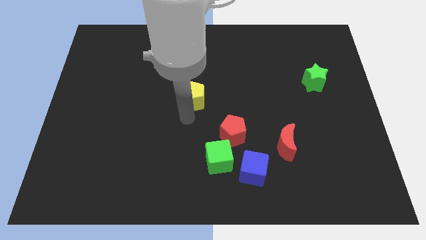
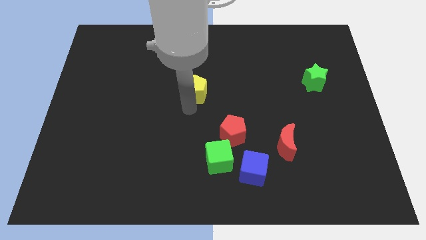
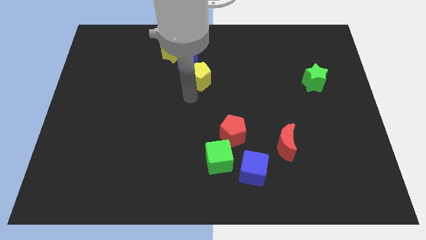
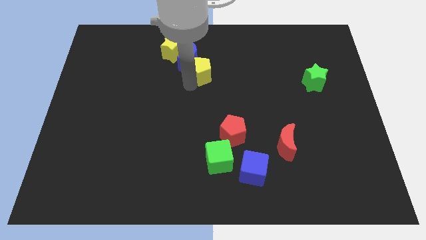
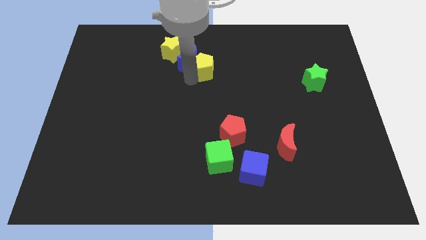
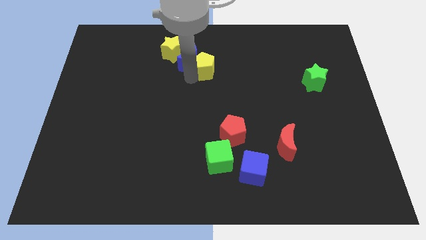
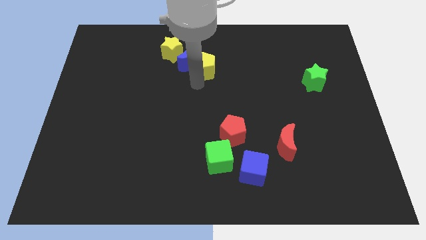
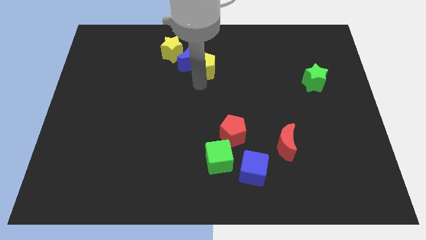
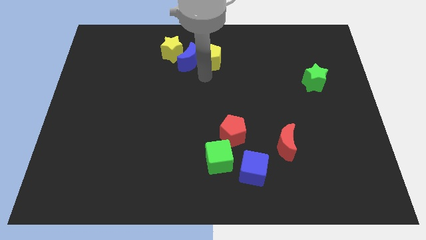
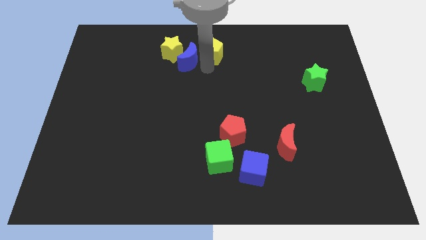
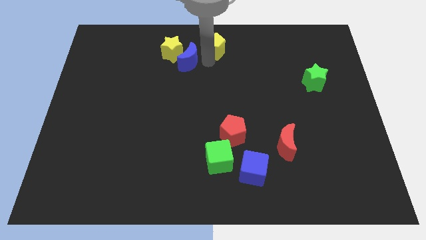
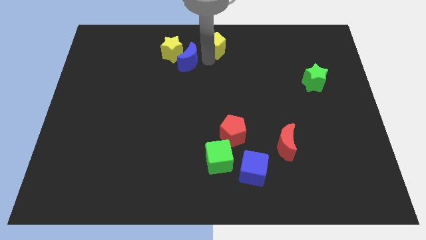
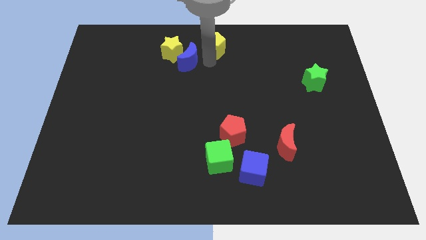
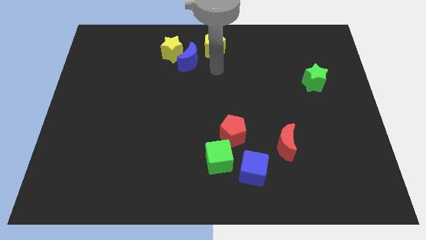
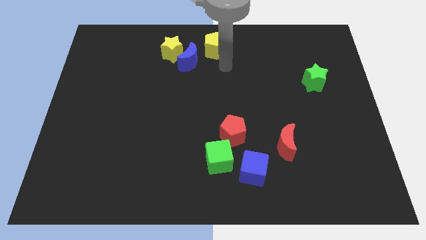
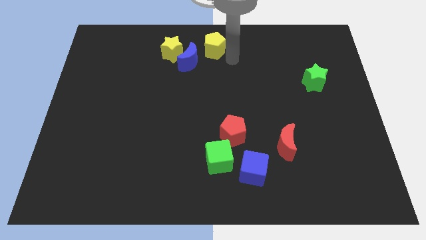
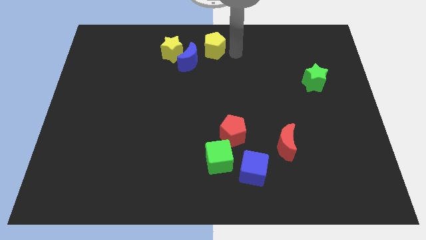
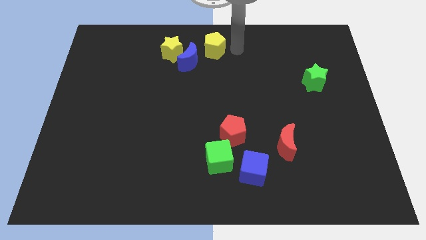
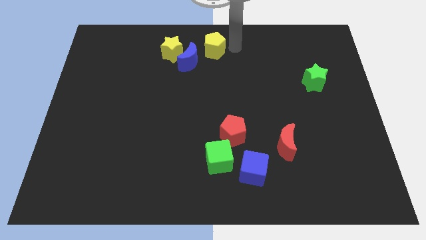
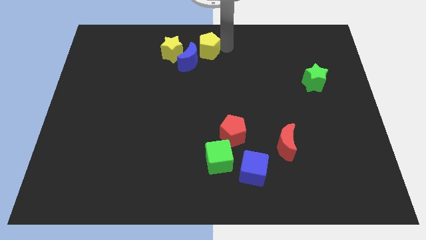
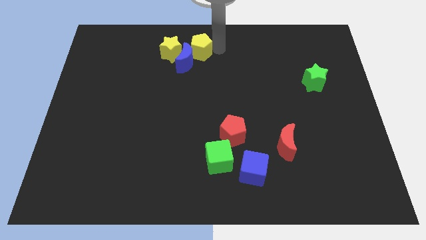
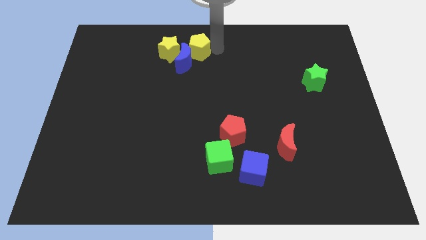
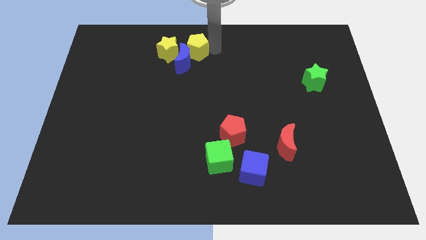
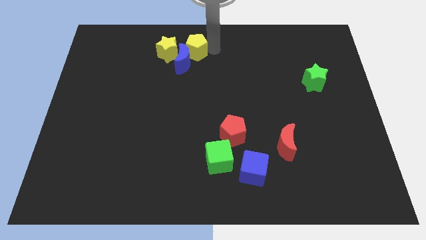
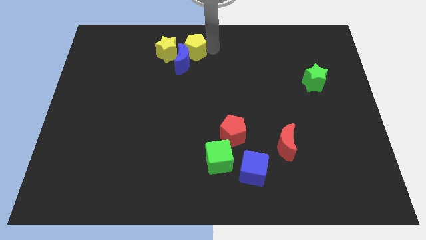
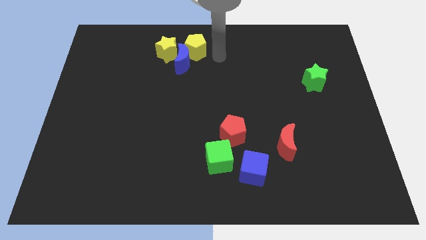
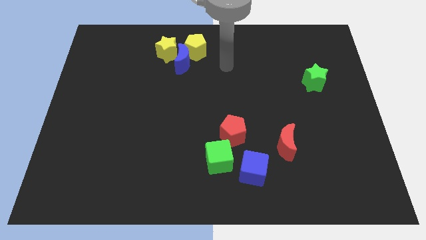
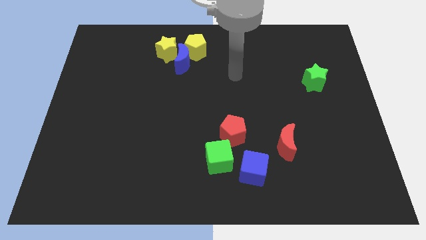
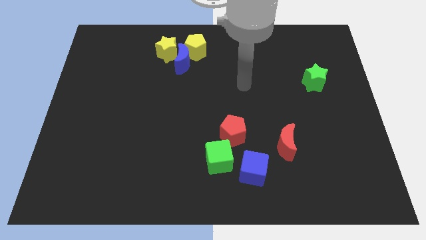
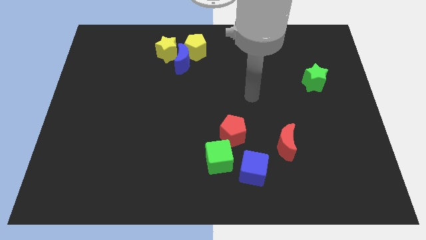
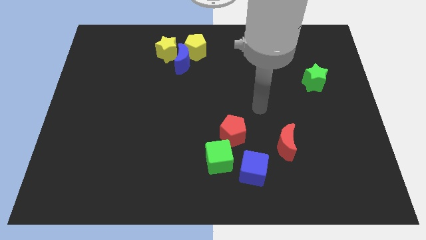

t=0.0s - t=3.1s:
move yellow pentagon right to blue moon

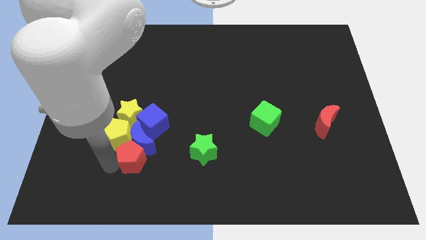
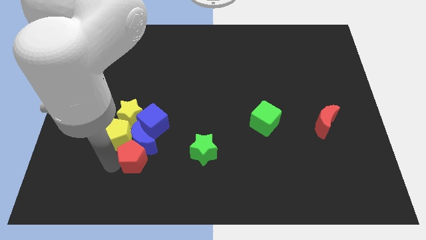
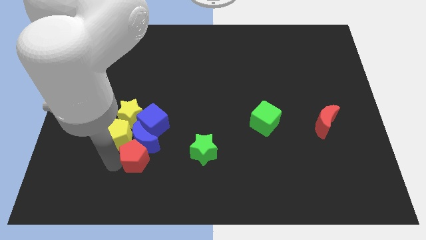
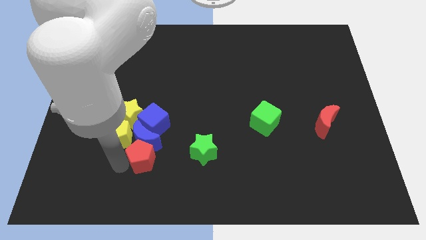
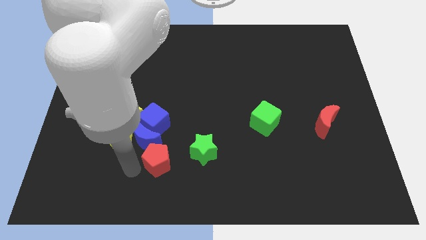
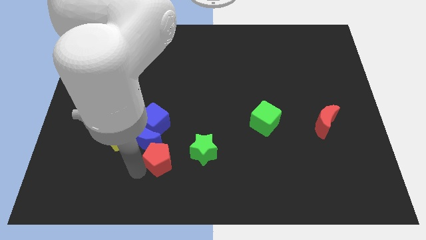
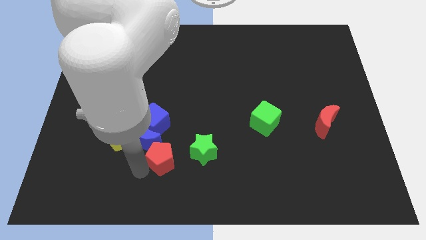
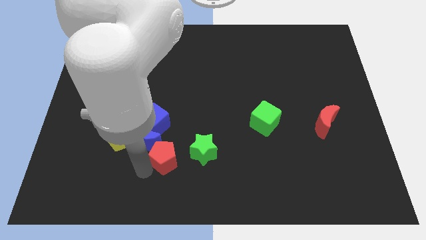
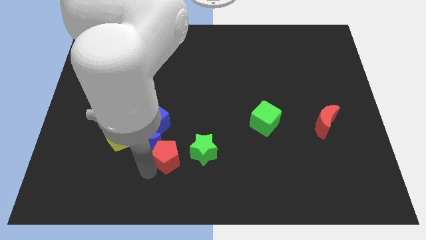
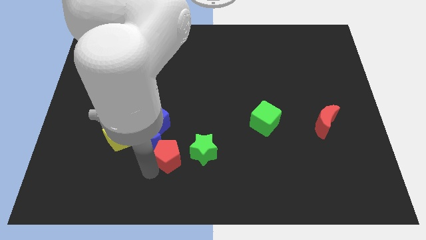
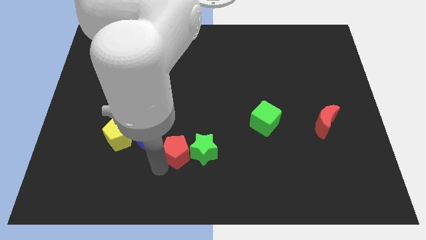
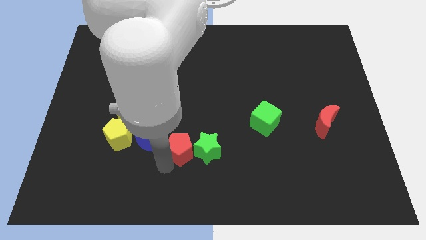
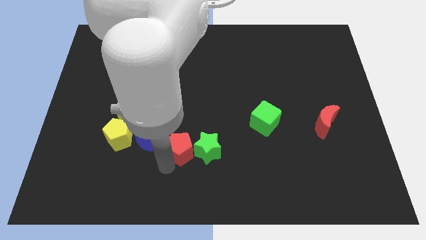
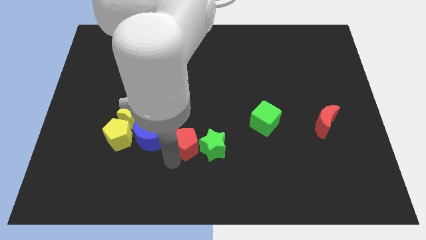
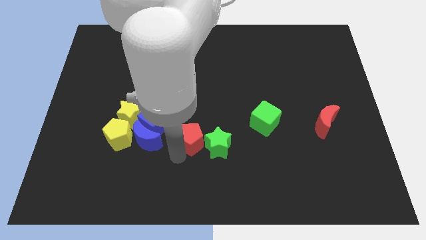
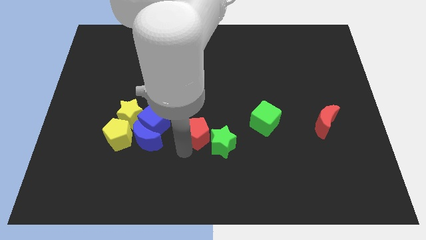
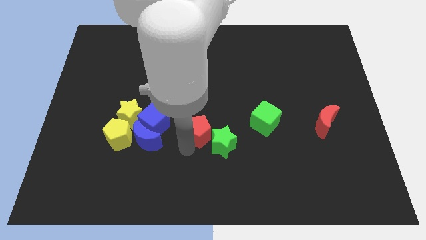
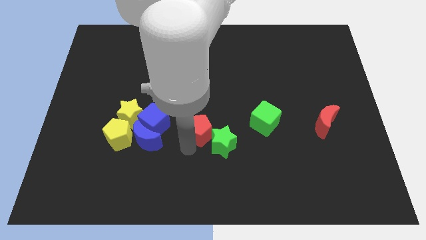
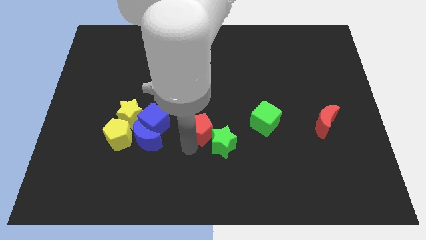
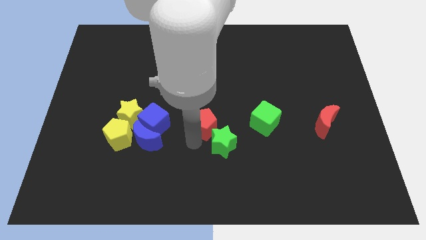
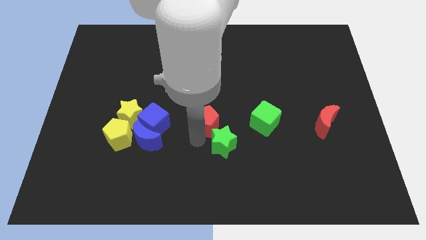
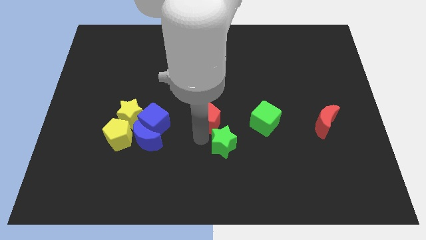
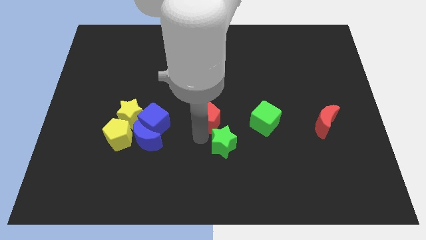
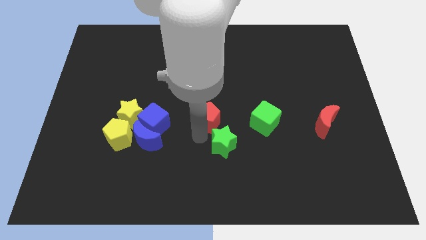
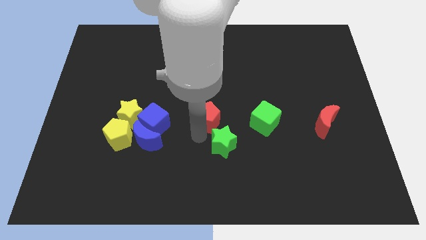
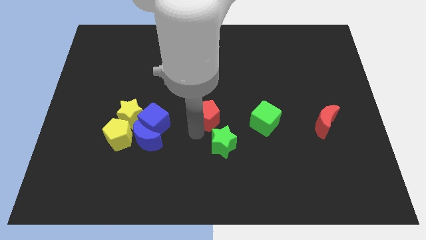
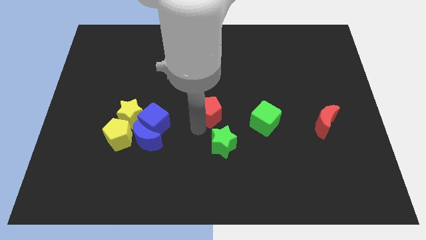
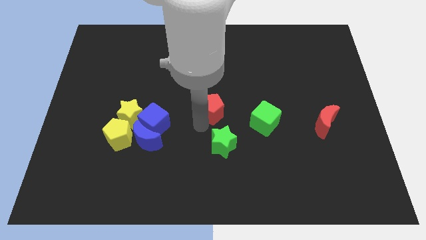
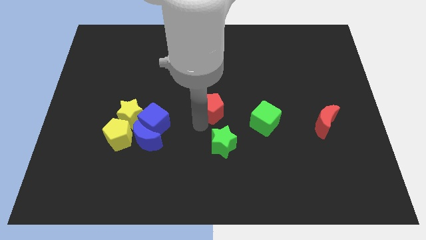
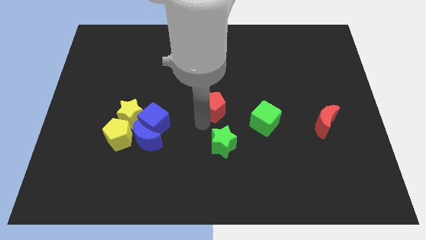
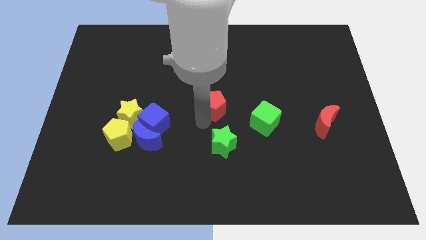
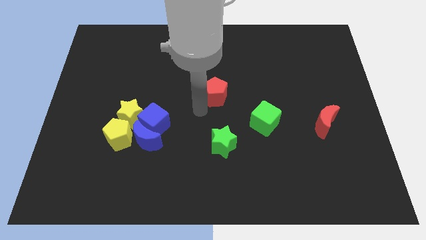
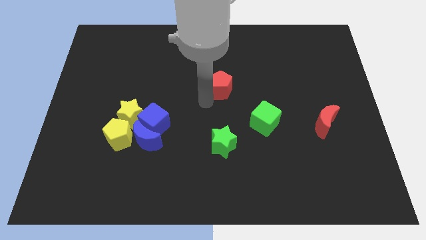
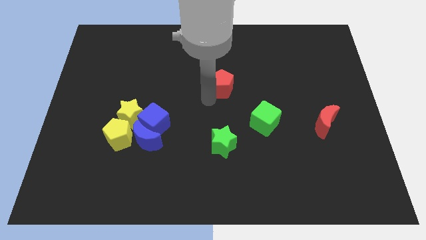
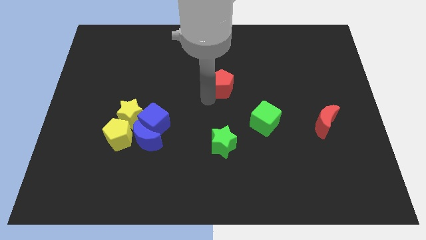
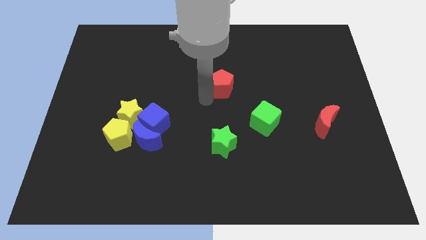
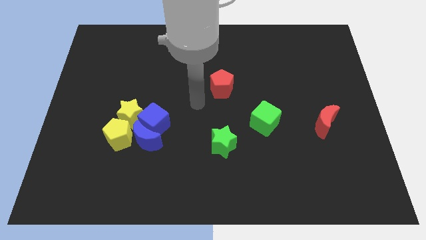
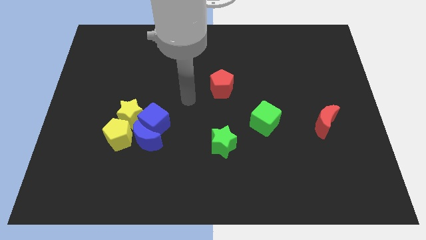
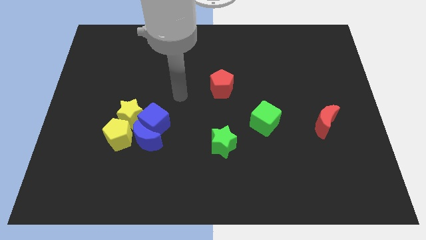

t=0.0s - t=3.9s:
place the red pentagon at the center of the board

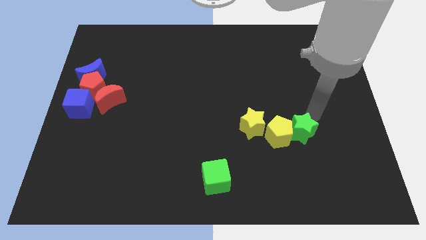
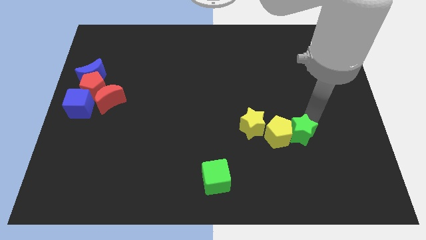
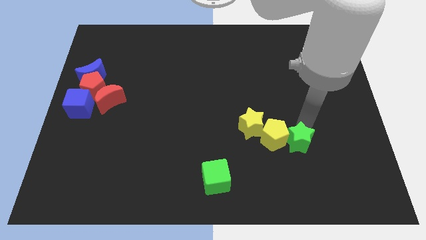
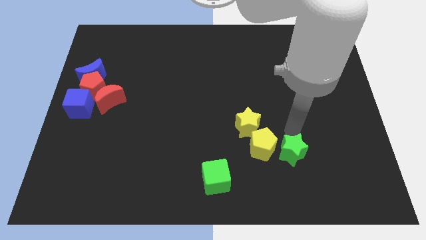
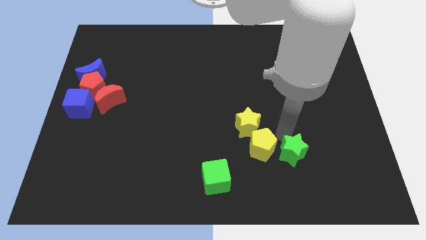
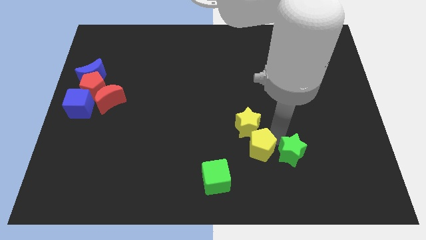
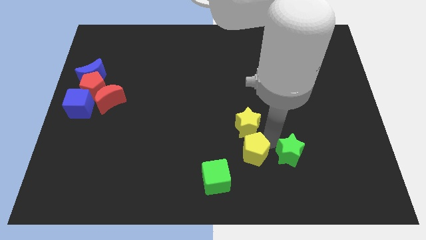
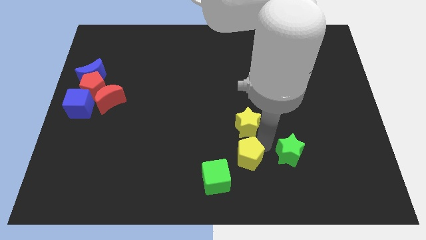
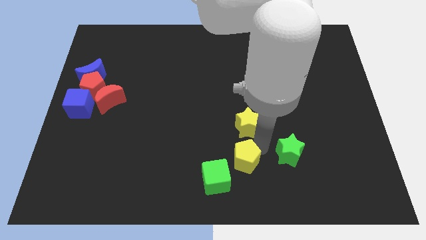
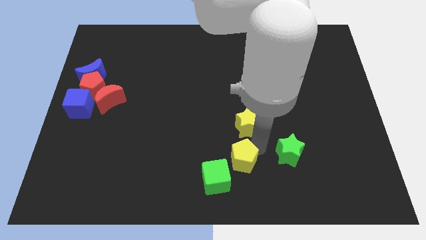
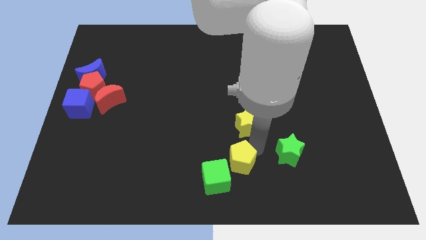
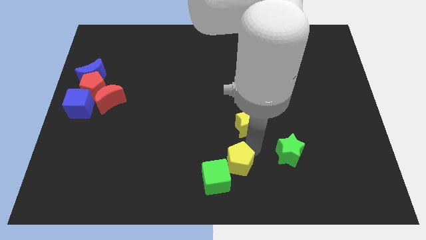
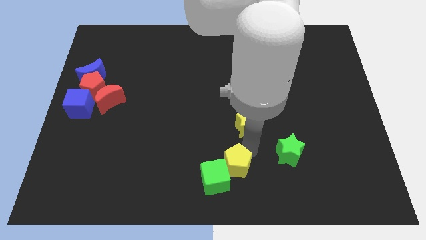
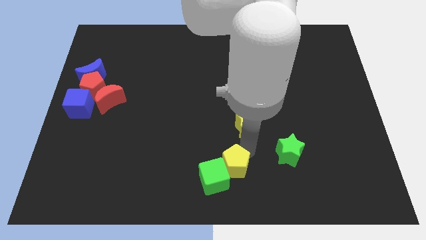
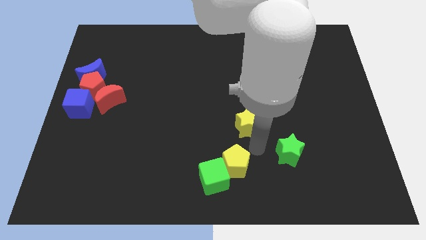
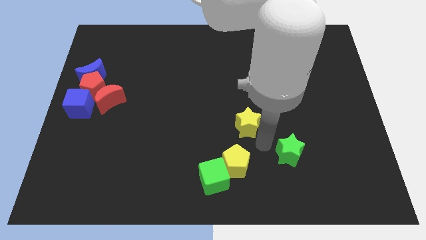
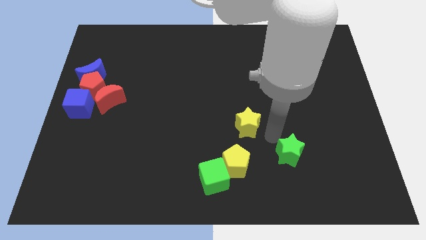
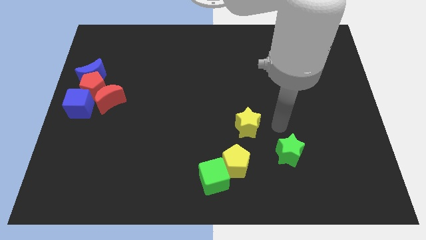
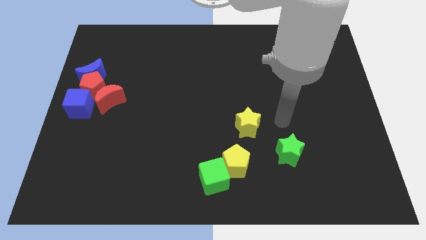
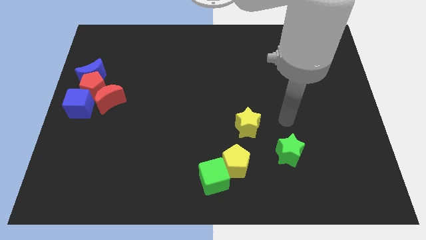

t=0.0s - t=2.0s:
separate yellow pentagon away from yellow star green star
